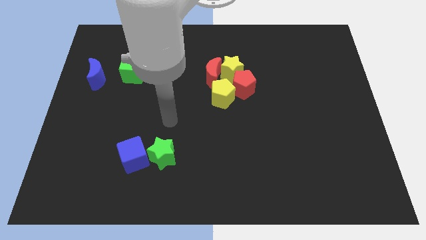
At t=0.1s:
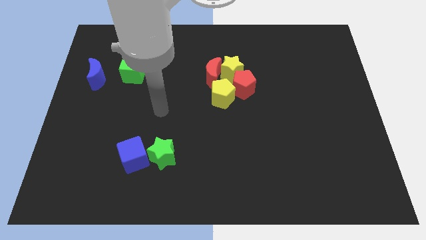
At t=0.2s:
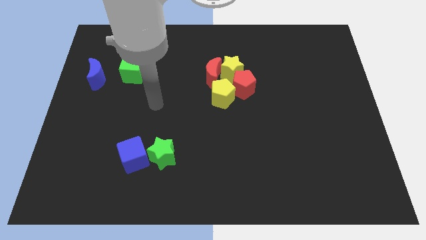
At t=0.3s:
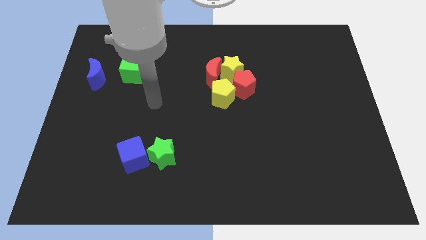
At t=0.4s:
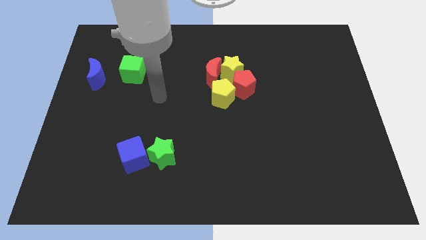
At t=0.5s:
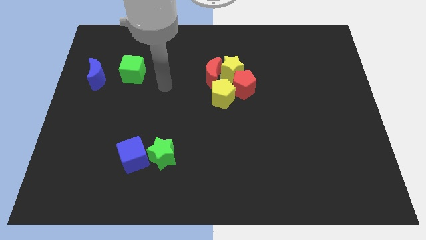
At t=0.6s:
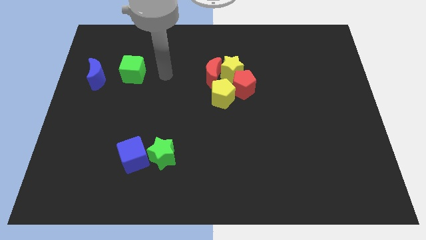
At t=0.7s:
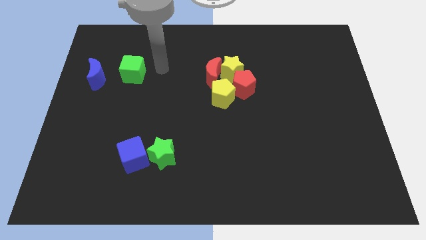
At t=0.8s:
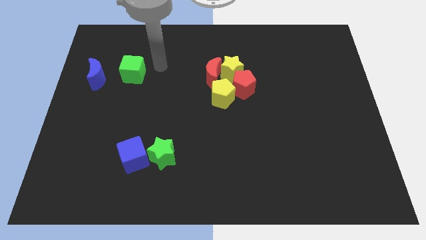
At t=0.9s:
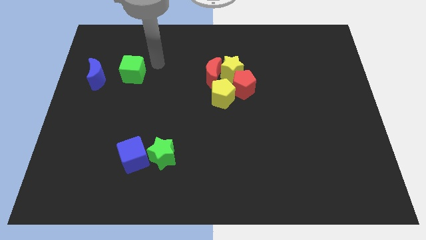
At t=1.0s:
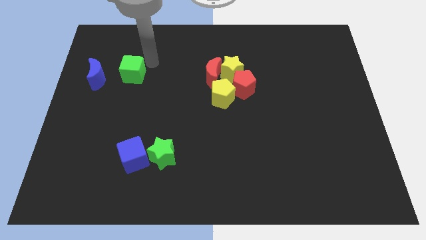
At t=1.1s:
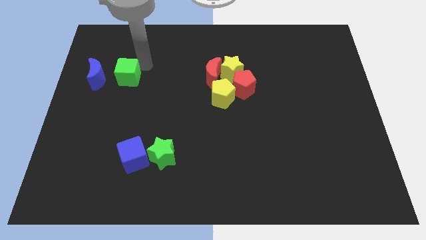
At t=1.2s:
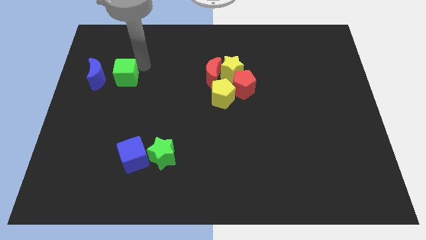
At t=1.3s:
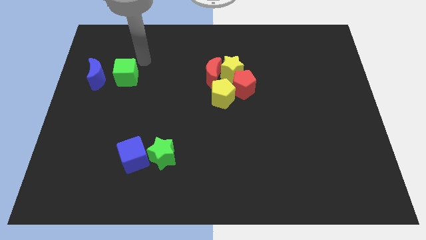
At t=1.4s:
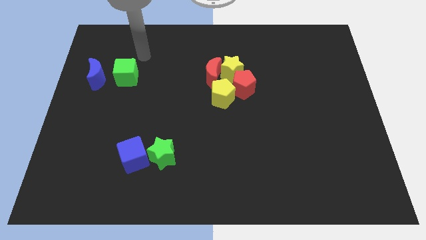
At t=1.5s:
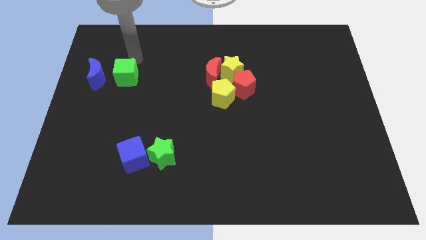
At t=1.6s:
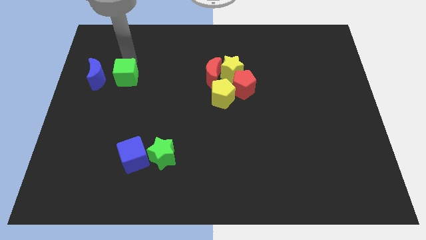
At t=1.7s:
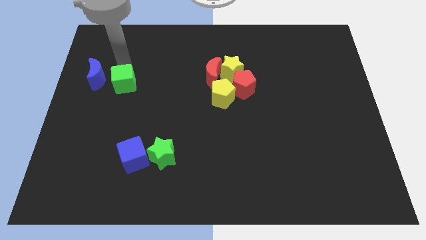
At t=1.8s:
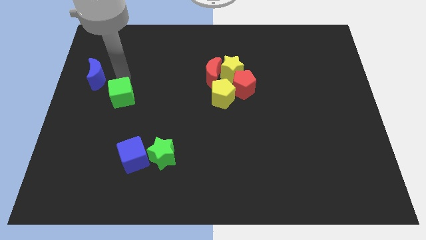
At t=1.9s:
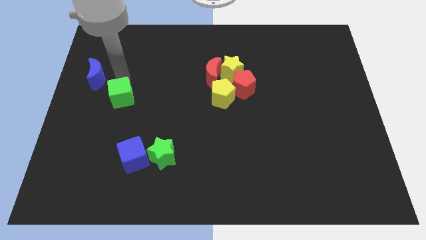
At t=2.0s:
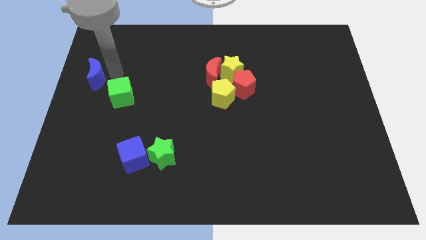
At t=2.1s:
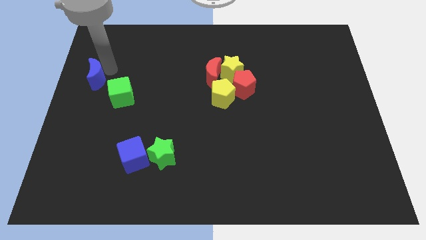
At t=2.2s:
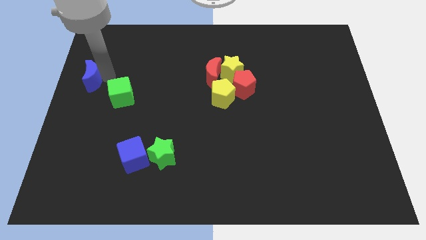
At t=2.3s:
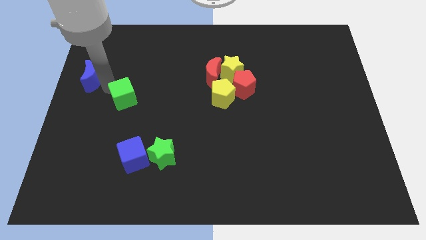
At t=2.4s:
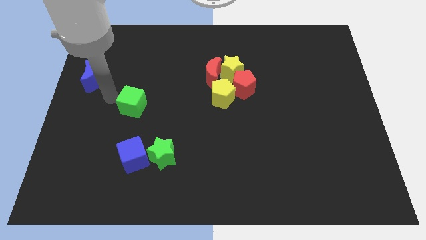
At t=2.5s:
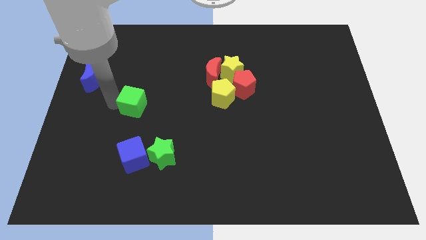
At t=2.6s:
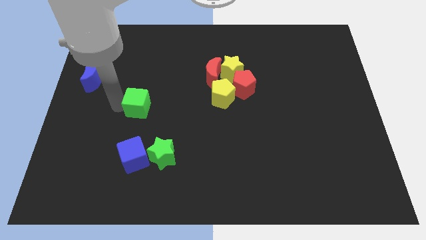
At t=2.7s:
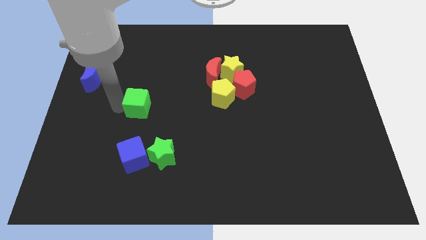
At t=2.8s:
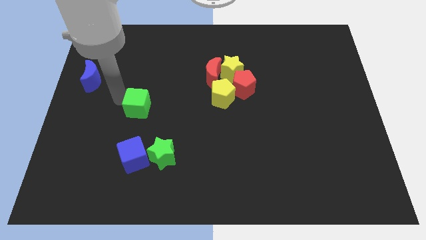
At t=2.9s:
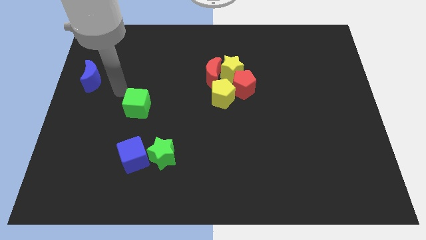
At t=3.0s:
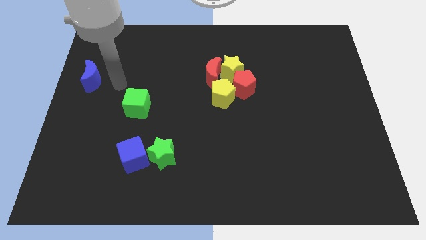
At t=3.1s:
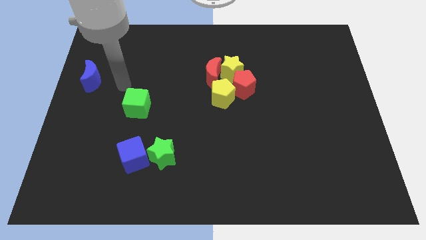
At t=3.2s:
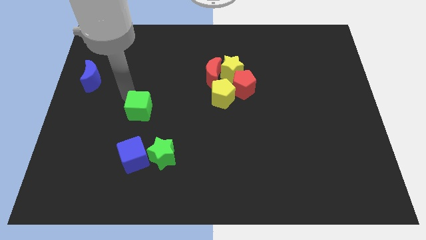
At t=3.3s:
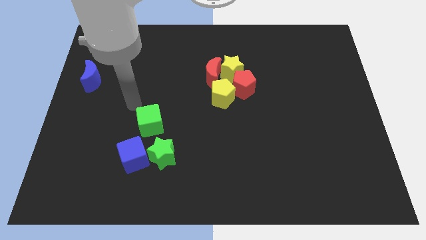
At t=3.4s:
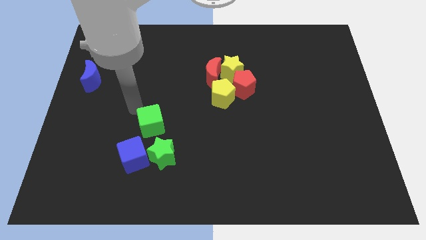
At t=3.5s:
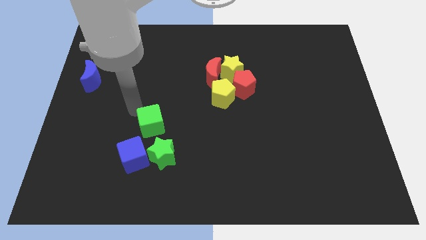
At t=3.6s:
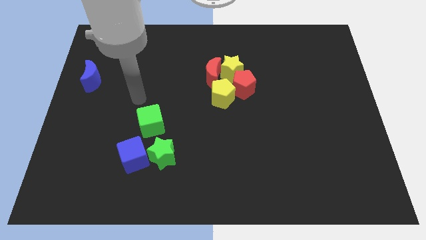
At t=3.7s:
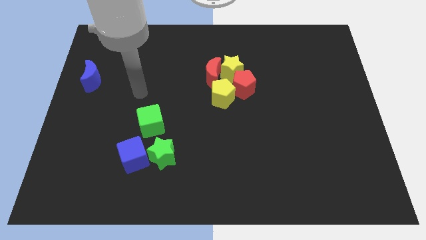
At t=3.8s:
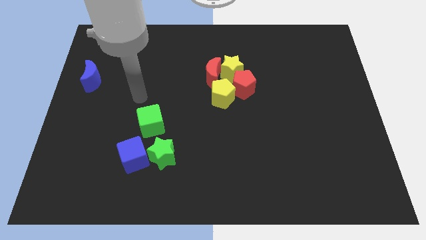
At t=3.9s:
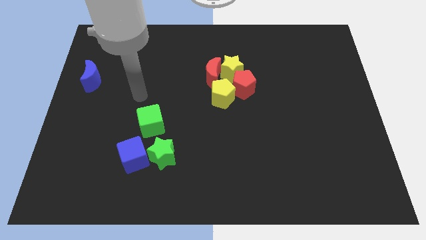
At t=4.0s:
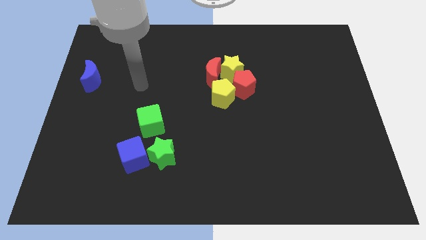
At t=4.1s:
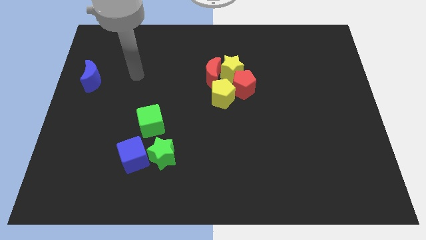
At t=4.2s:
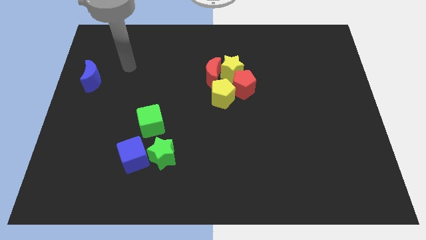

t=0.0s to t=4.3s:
push the green cube to the top side of the green star

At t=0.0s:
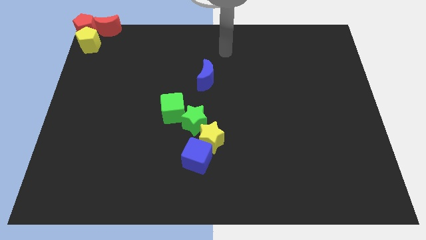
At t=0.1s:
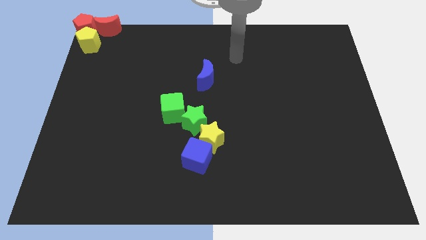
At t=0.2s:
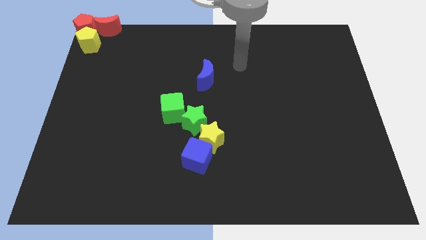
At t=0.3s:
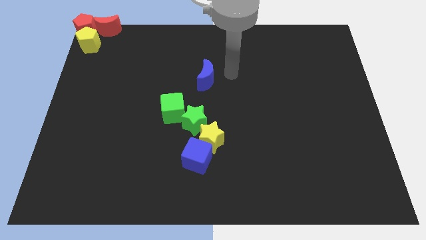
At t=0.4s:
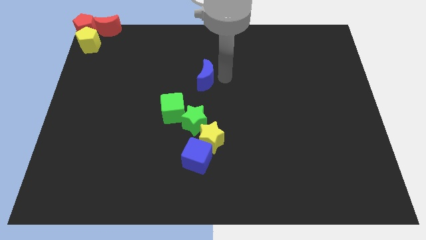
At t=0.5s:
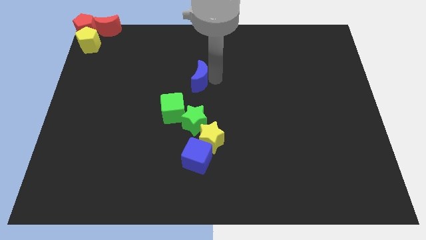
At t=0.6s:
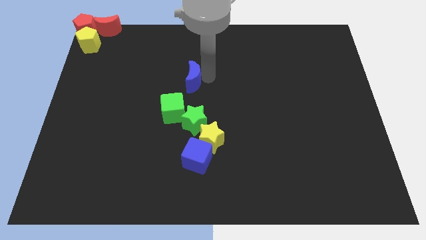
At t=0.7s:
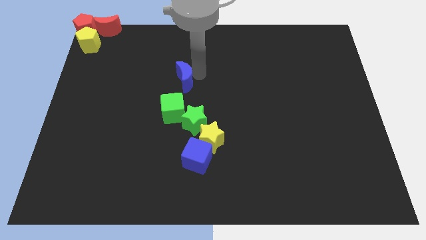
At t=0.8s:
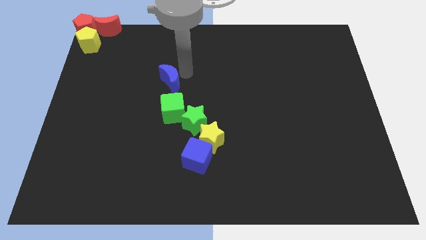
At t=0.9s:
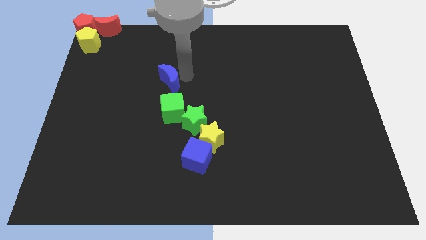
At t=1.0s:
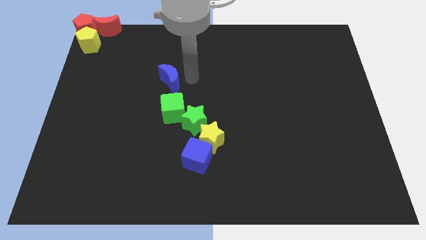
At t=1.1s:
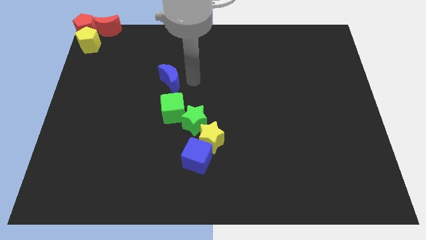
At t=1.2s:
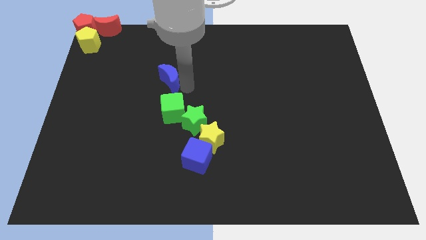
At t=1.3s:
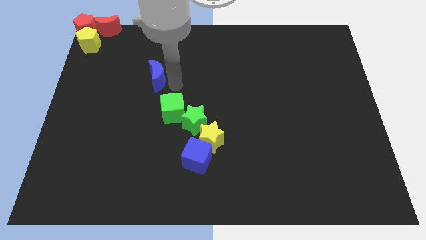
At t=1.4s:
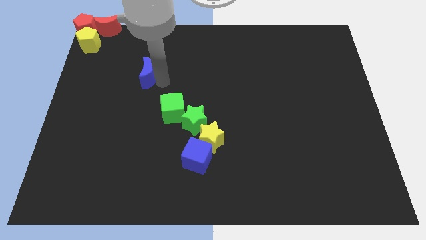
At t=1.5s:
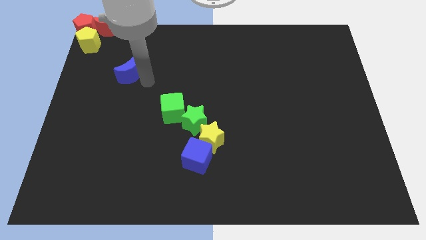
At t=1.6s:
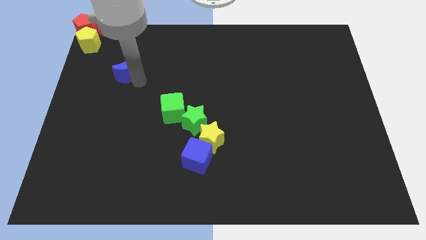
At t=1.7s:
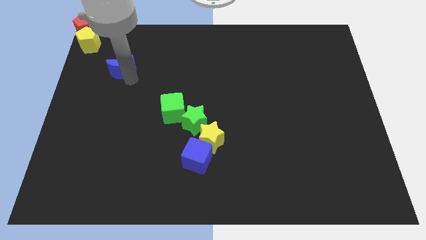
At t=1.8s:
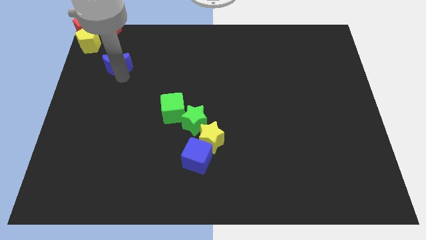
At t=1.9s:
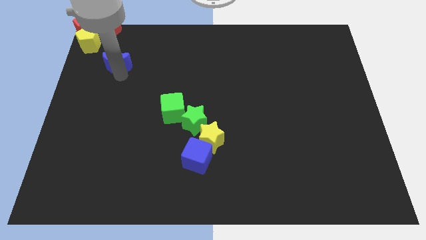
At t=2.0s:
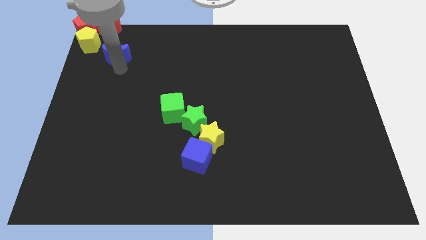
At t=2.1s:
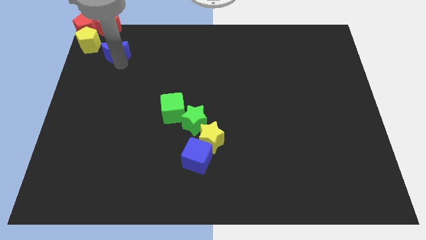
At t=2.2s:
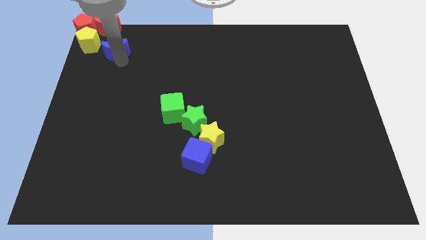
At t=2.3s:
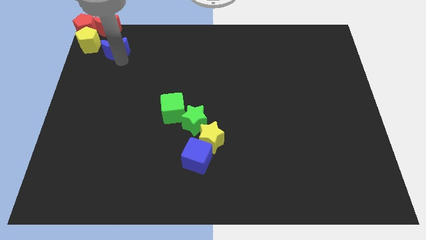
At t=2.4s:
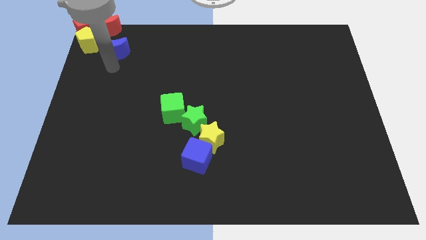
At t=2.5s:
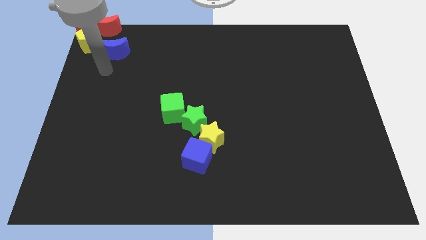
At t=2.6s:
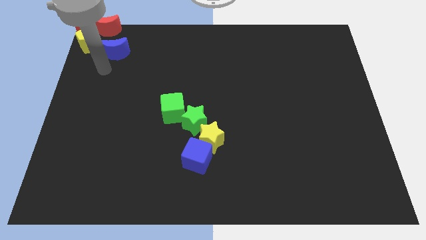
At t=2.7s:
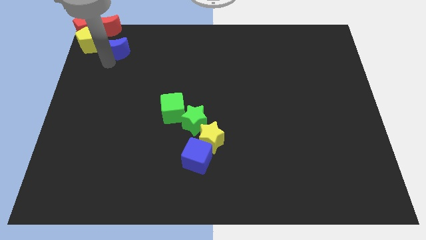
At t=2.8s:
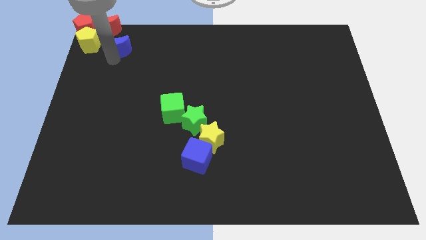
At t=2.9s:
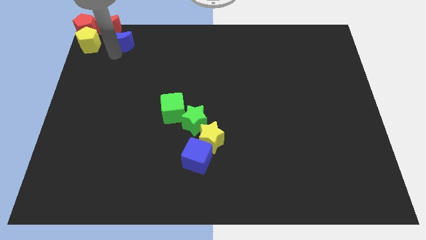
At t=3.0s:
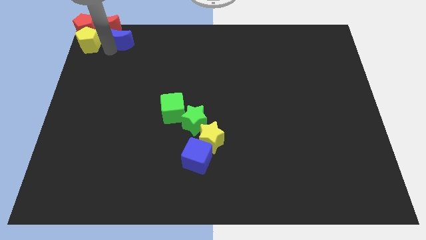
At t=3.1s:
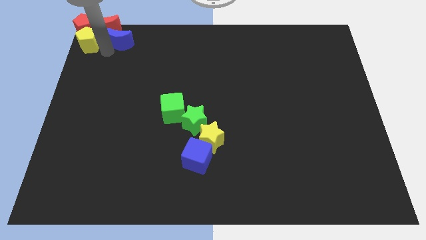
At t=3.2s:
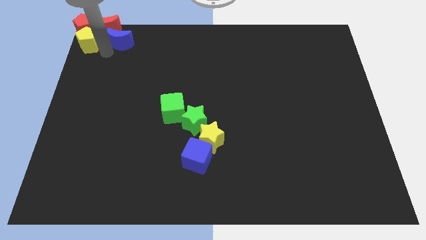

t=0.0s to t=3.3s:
put the blue crescent to the right of the yellow pentagon

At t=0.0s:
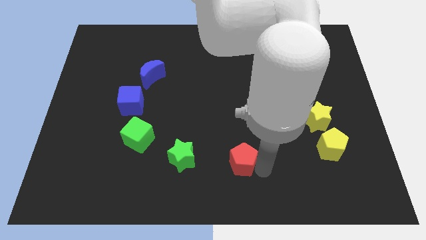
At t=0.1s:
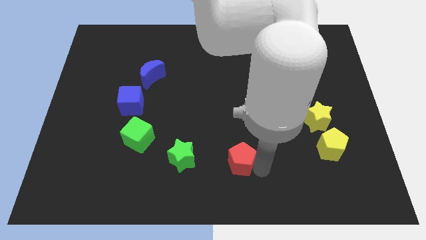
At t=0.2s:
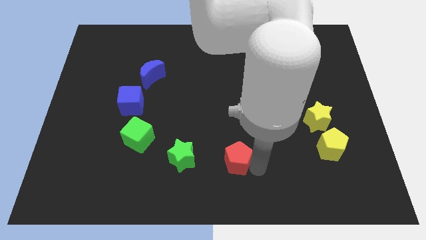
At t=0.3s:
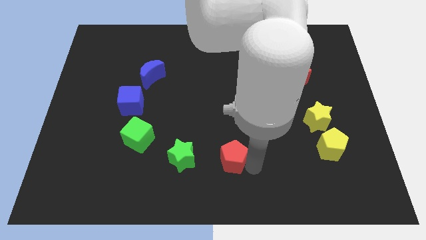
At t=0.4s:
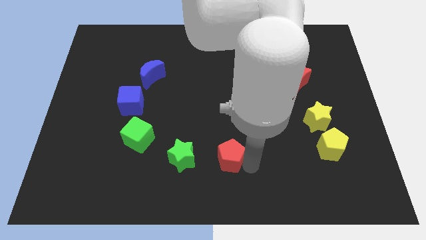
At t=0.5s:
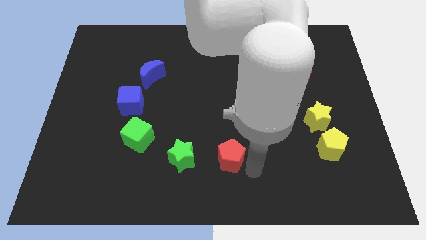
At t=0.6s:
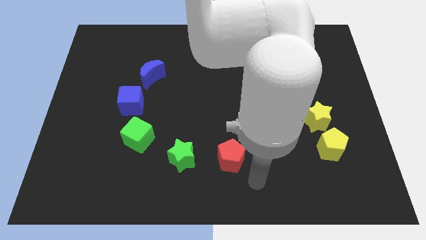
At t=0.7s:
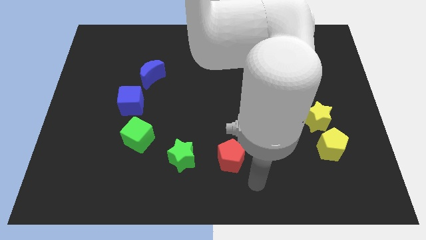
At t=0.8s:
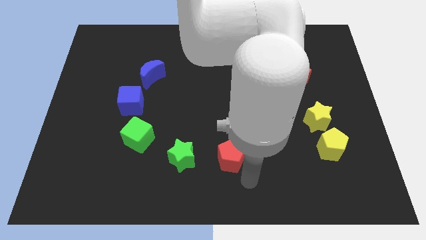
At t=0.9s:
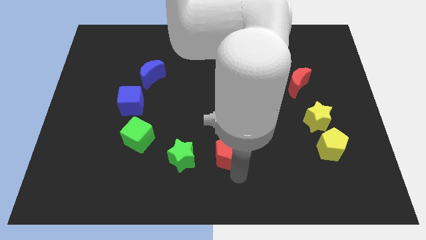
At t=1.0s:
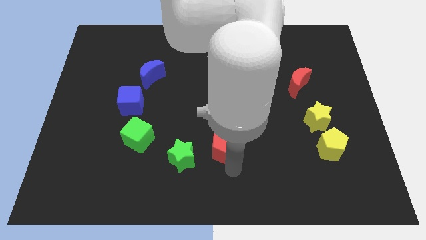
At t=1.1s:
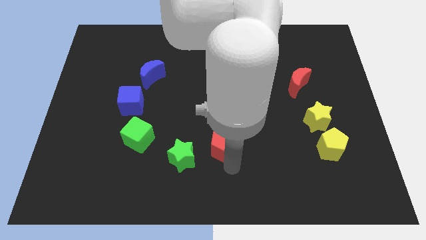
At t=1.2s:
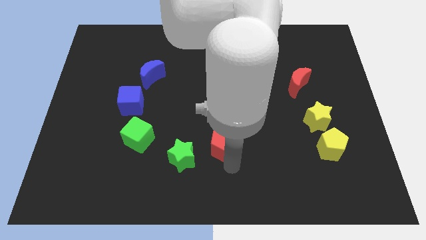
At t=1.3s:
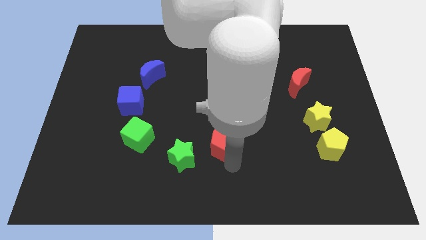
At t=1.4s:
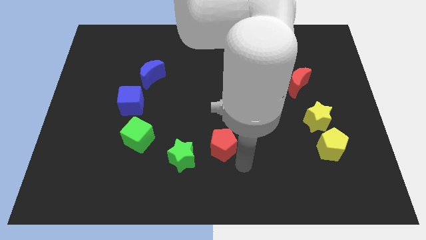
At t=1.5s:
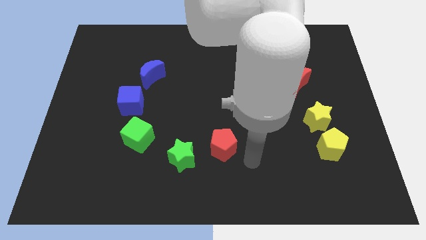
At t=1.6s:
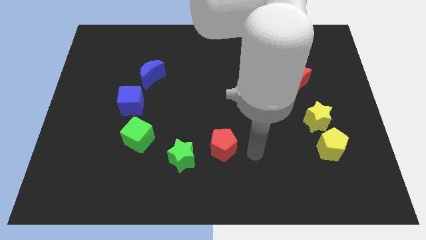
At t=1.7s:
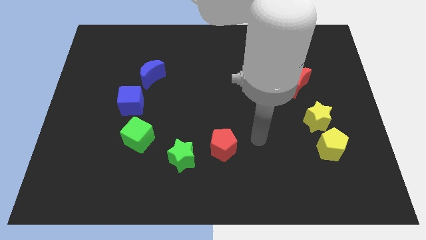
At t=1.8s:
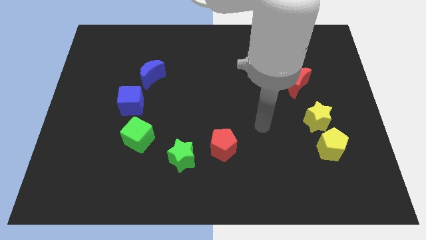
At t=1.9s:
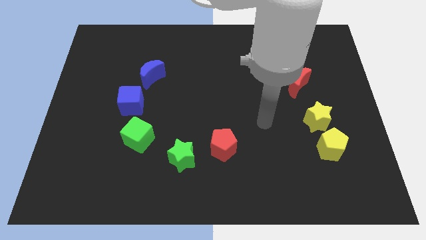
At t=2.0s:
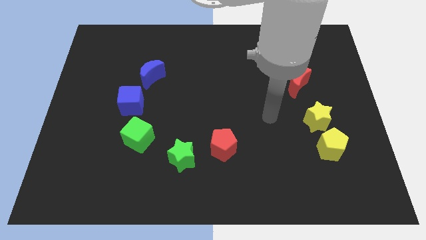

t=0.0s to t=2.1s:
place the red pentagon to the right of green star
